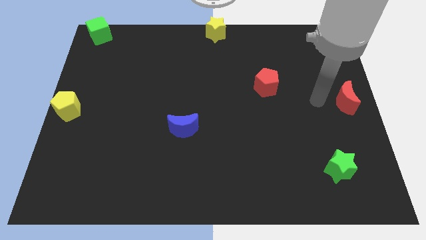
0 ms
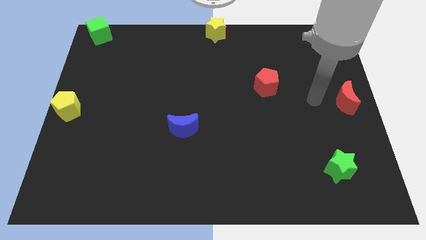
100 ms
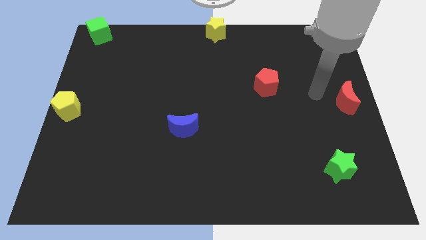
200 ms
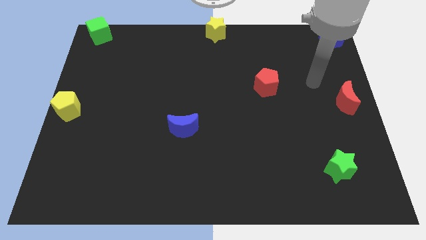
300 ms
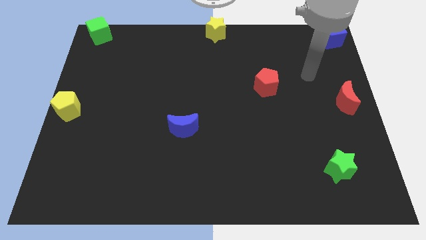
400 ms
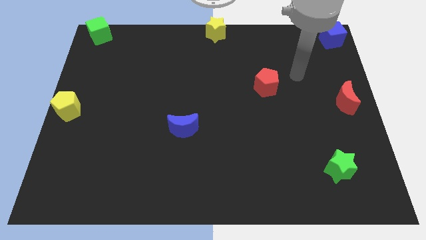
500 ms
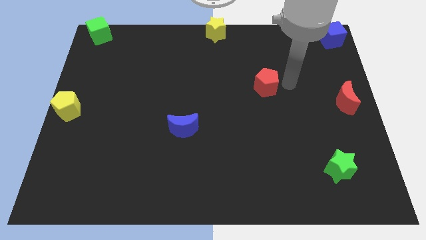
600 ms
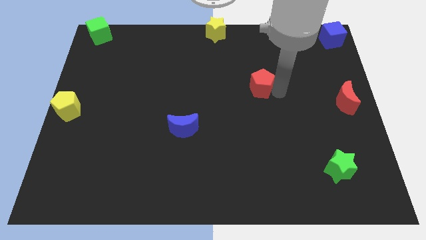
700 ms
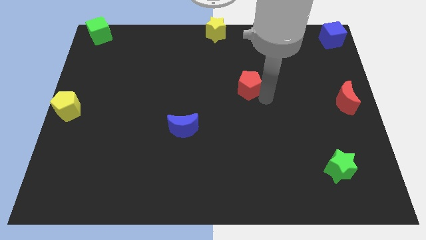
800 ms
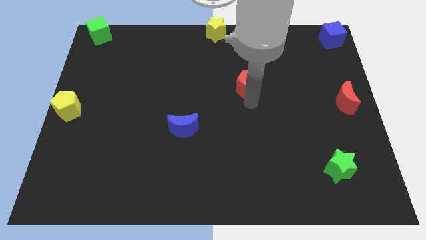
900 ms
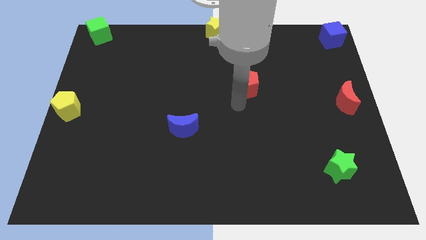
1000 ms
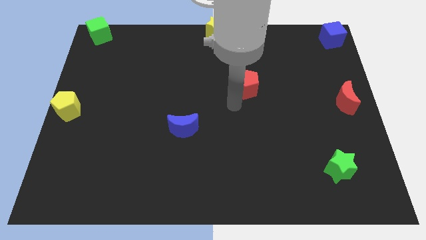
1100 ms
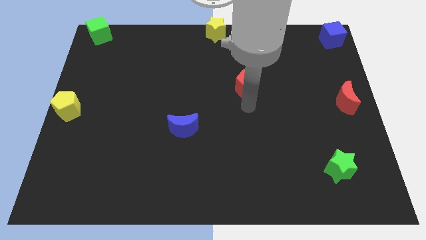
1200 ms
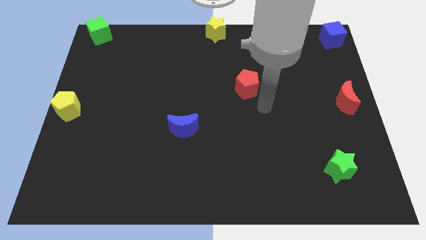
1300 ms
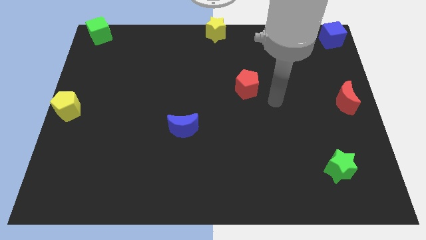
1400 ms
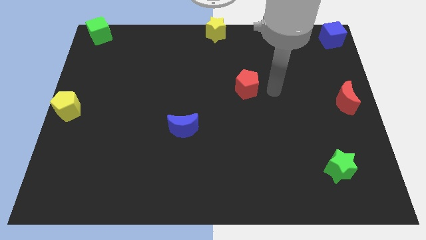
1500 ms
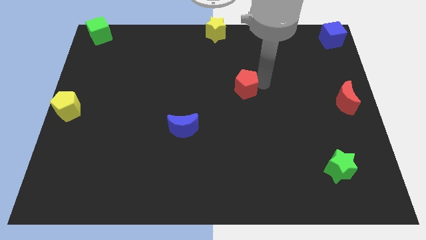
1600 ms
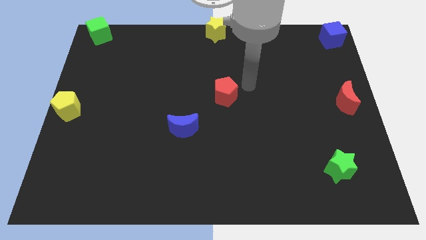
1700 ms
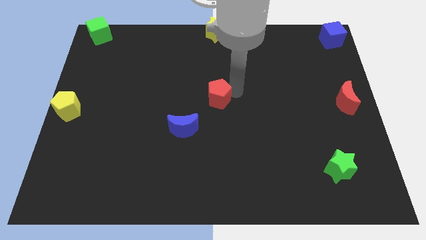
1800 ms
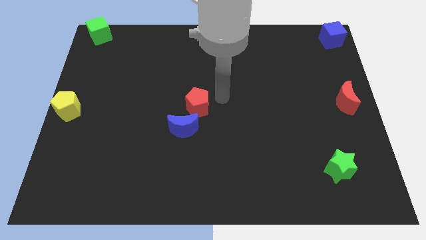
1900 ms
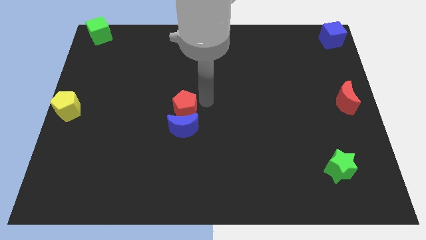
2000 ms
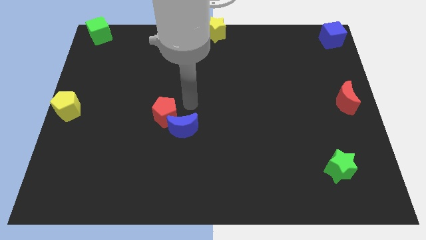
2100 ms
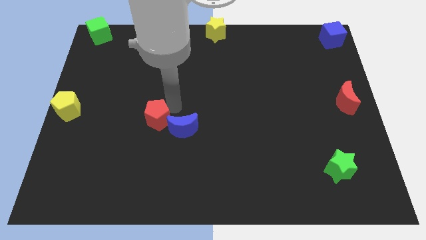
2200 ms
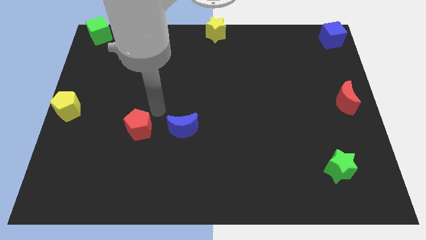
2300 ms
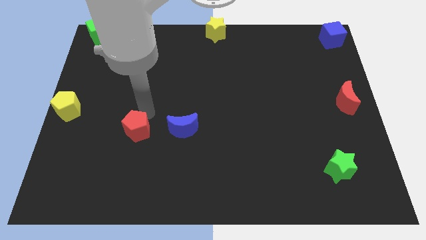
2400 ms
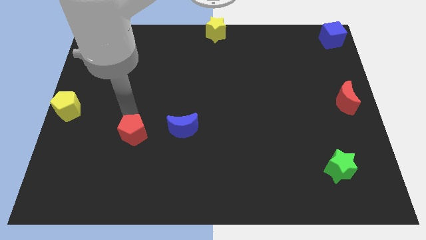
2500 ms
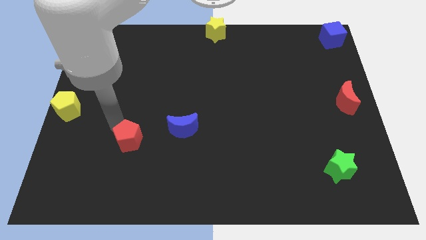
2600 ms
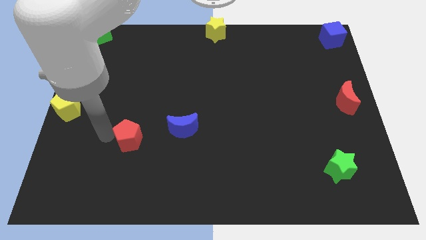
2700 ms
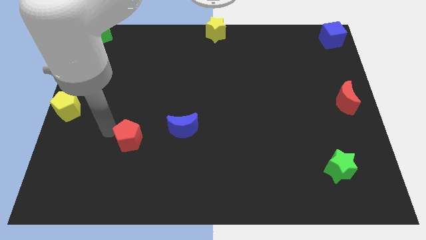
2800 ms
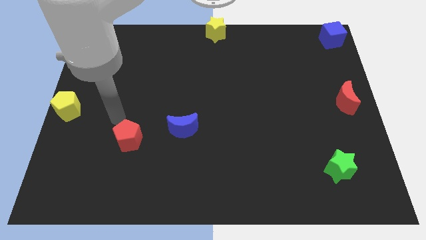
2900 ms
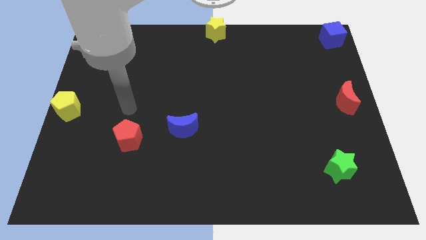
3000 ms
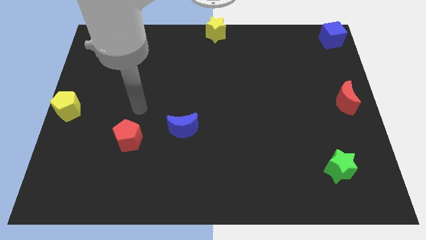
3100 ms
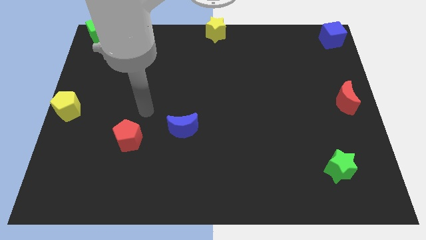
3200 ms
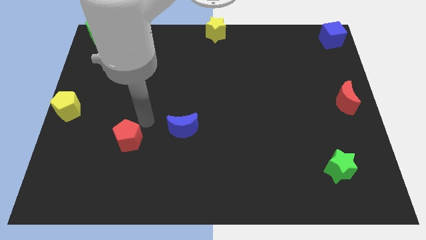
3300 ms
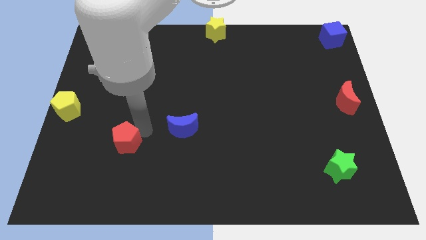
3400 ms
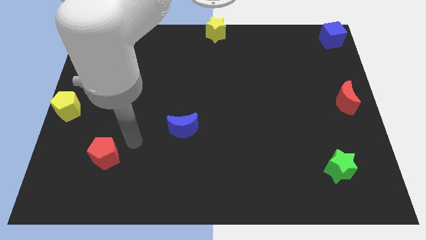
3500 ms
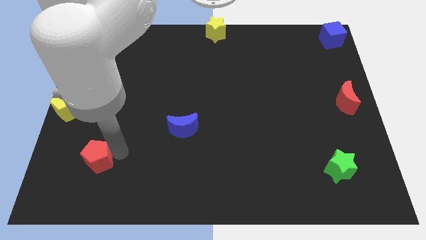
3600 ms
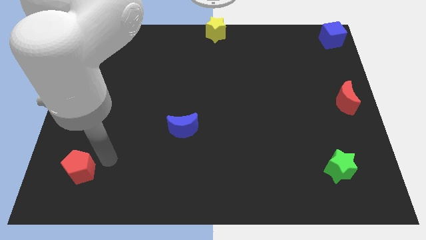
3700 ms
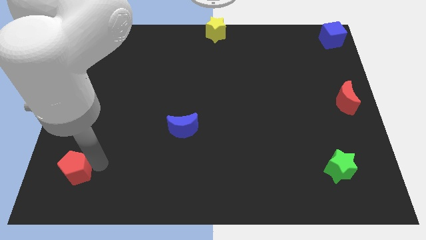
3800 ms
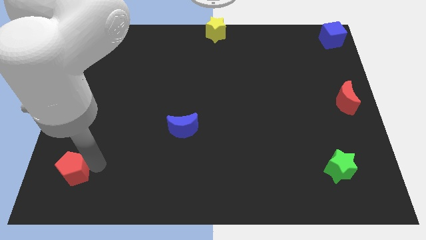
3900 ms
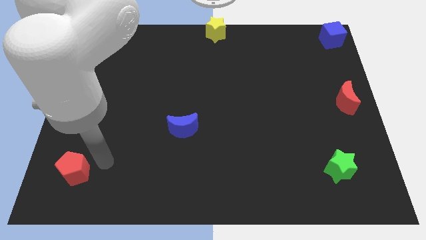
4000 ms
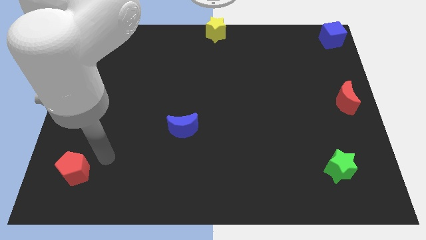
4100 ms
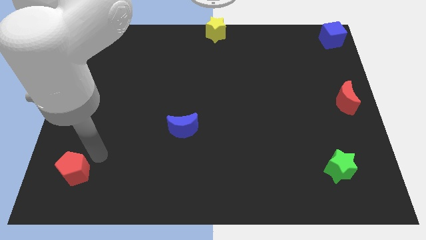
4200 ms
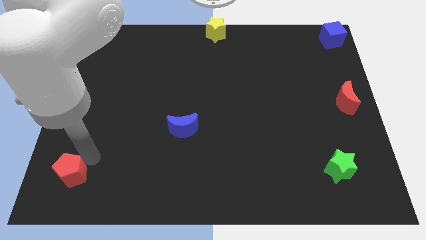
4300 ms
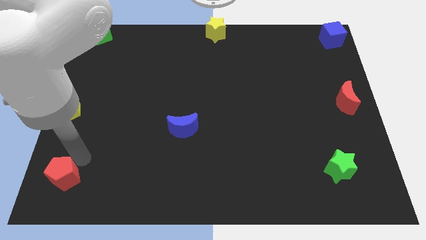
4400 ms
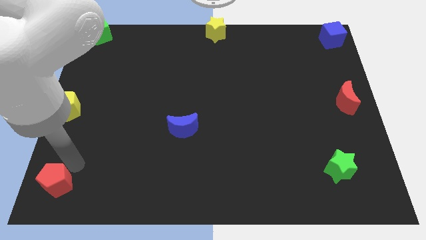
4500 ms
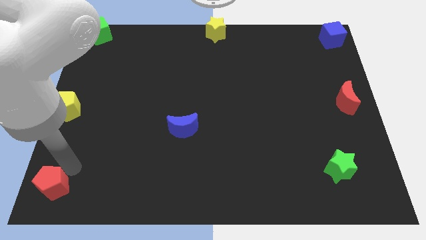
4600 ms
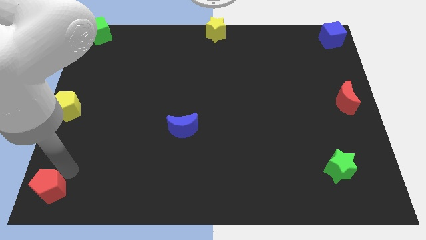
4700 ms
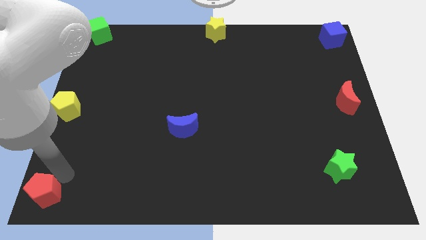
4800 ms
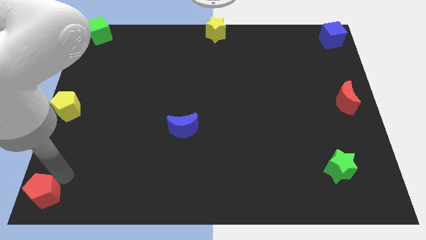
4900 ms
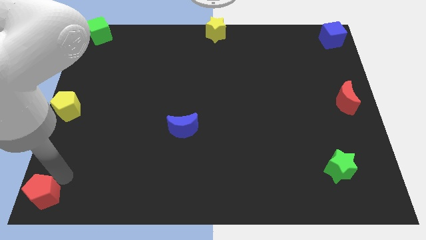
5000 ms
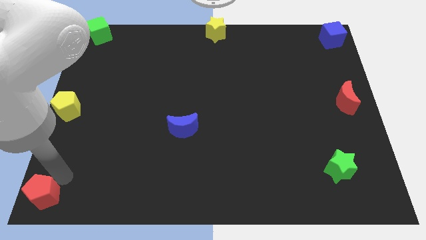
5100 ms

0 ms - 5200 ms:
place red pentagon at the bottom left corner of the board

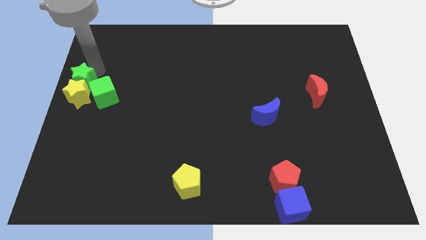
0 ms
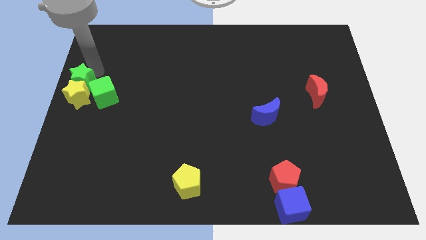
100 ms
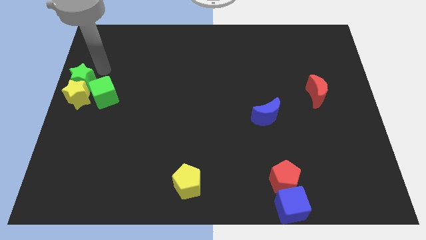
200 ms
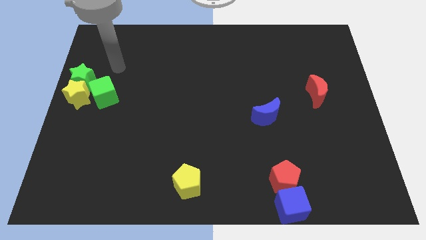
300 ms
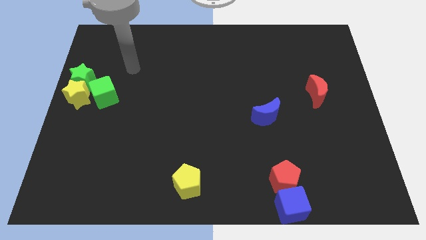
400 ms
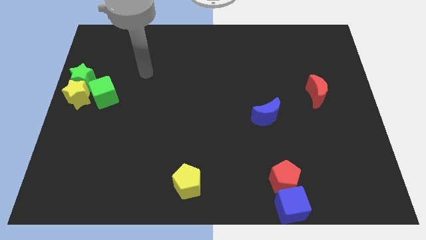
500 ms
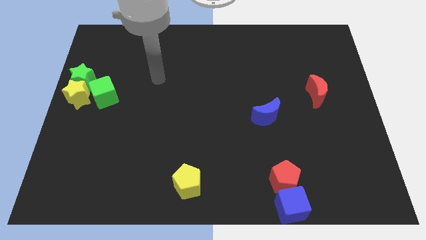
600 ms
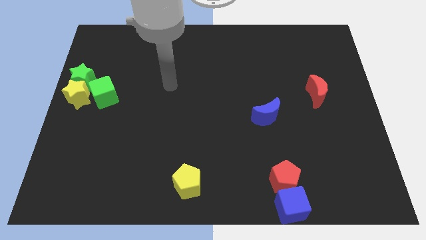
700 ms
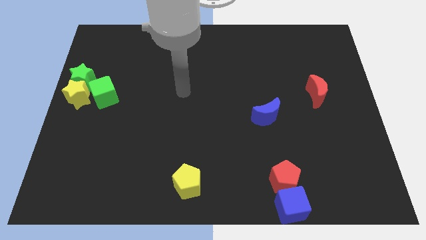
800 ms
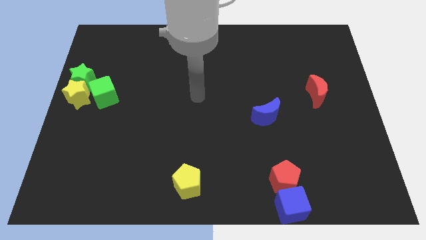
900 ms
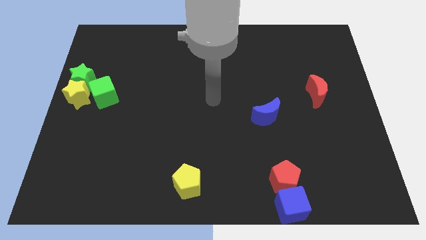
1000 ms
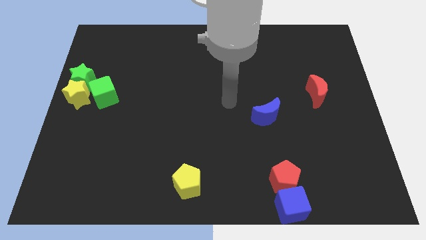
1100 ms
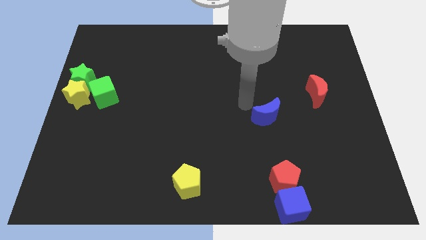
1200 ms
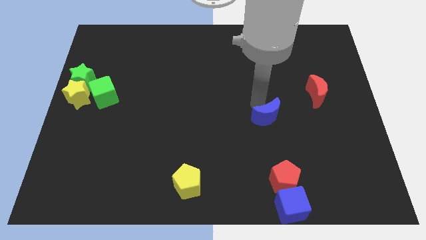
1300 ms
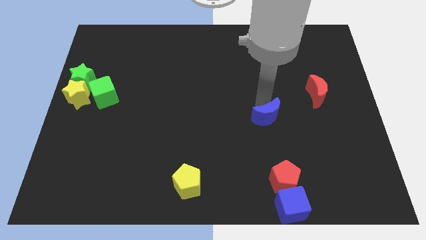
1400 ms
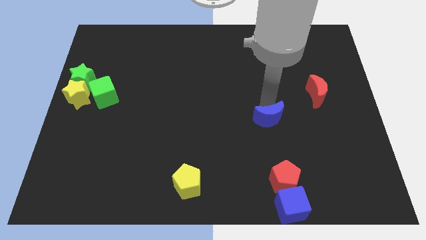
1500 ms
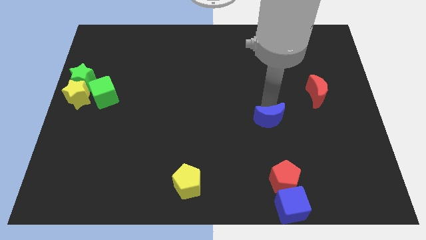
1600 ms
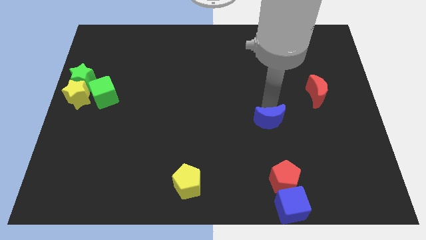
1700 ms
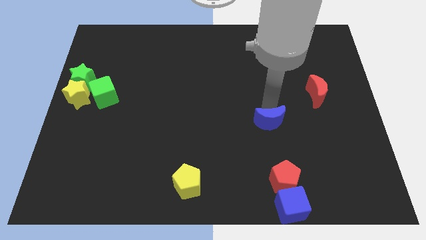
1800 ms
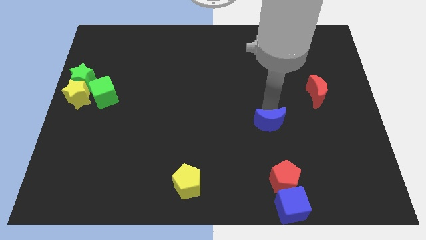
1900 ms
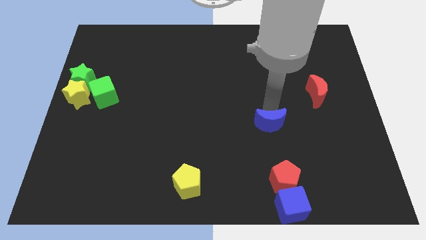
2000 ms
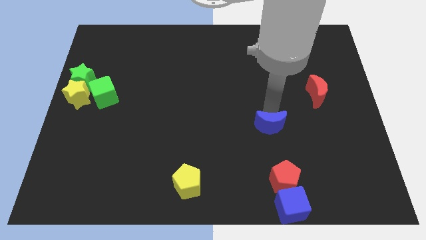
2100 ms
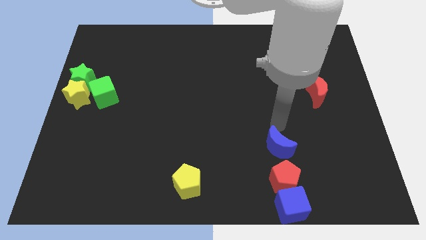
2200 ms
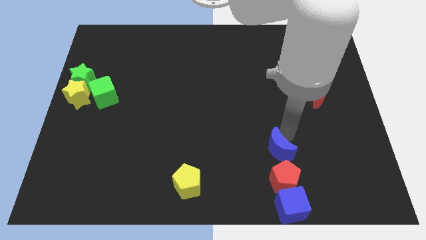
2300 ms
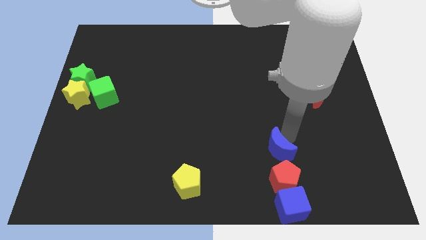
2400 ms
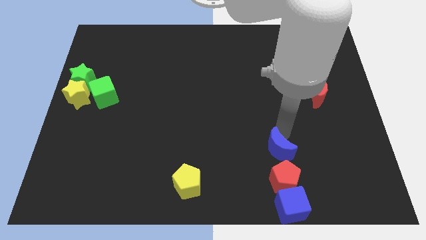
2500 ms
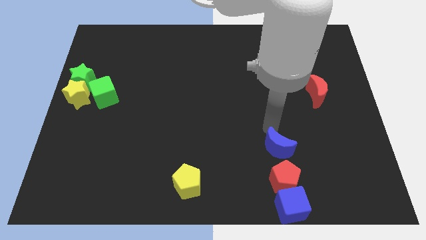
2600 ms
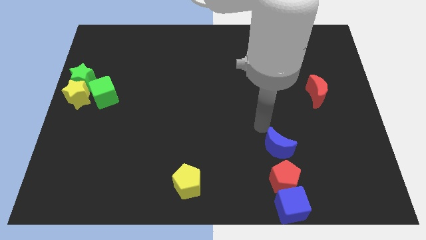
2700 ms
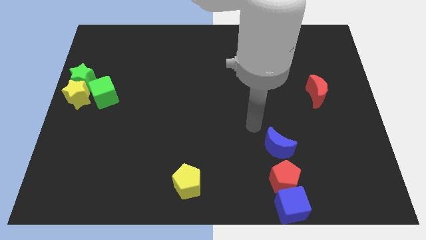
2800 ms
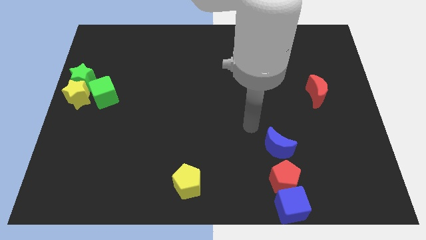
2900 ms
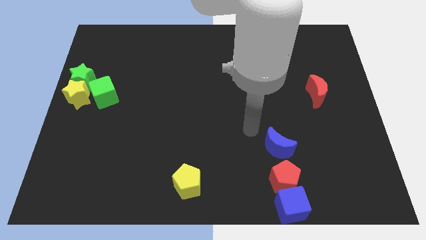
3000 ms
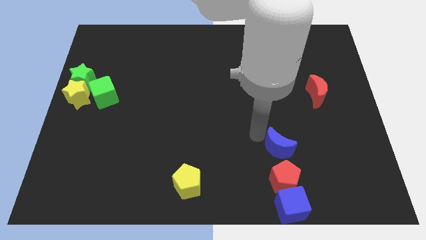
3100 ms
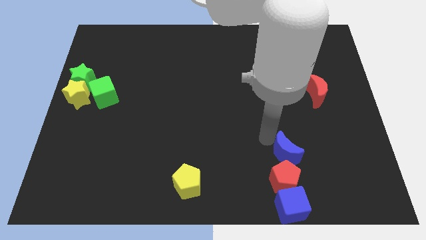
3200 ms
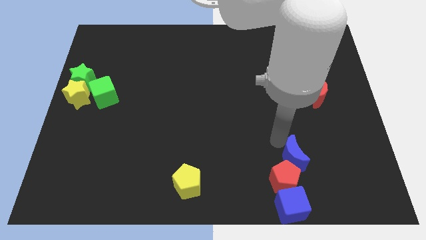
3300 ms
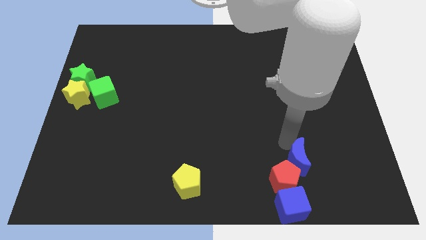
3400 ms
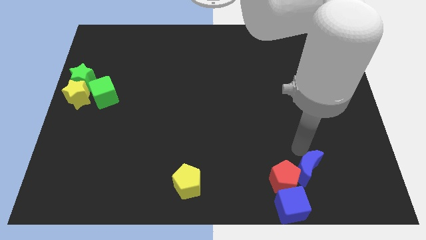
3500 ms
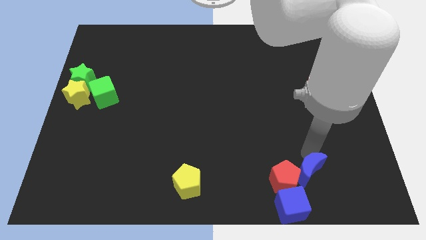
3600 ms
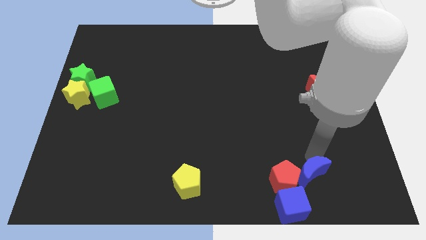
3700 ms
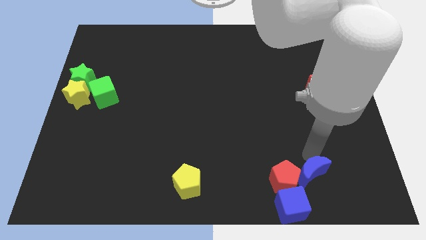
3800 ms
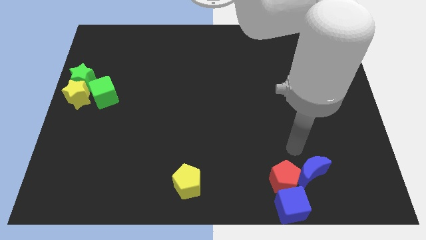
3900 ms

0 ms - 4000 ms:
move the blue cube into the right side of the red pentagon
